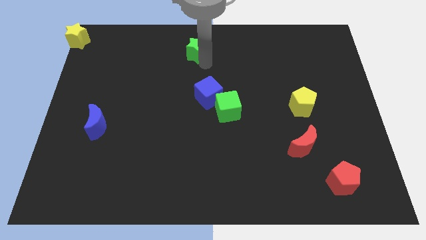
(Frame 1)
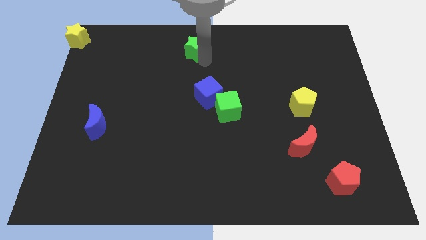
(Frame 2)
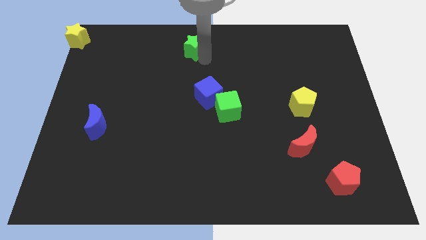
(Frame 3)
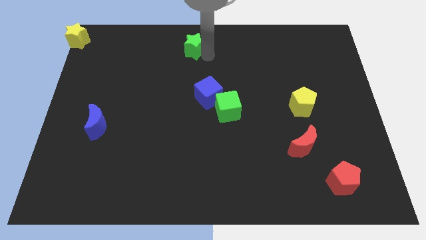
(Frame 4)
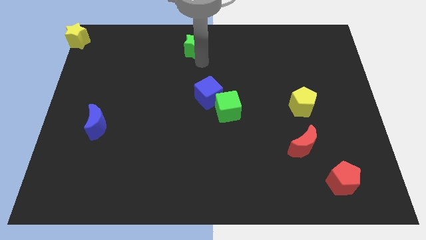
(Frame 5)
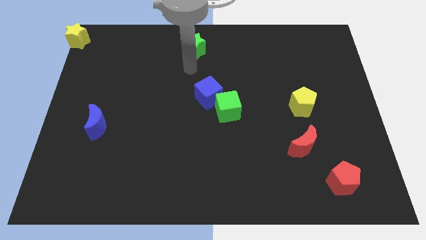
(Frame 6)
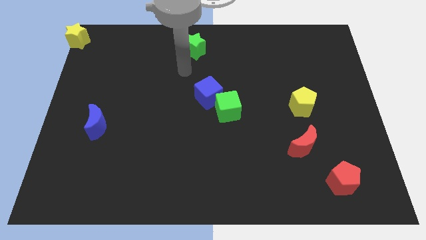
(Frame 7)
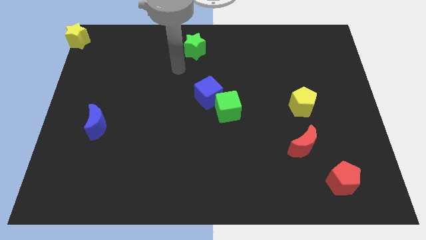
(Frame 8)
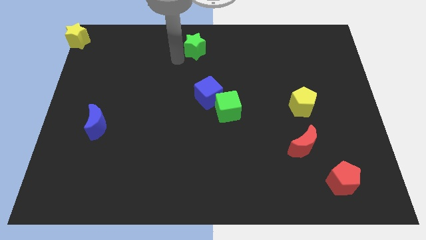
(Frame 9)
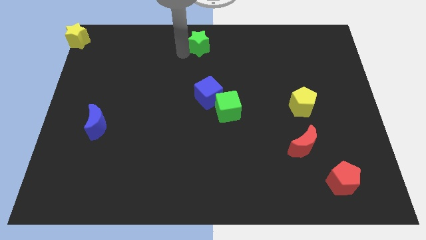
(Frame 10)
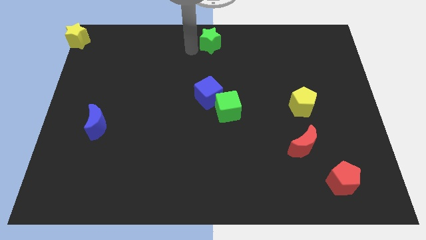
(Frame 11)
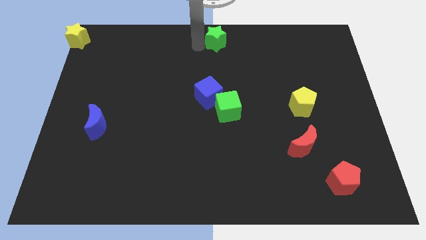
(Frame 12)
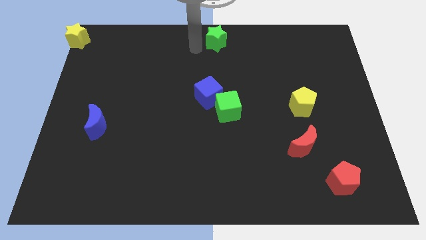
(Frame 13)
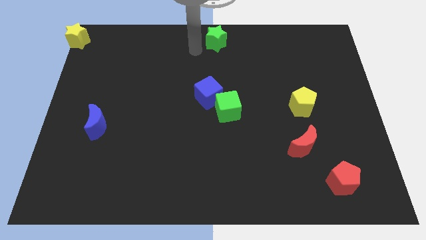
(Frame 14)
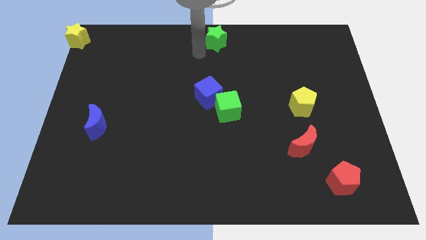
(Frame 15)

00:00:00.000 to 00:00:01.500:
move the green star to the top center of the board

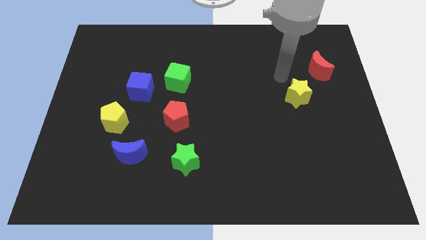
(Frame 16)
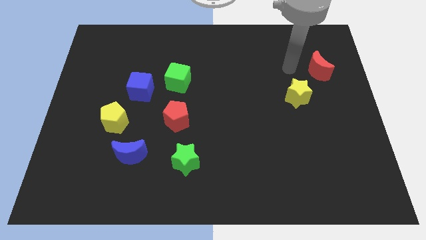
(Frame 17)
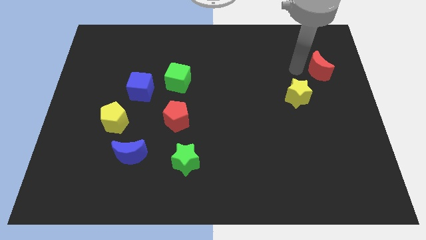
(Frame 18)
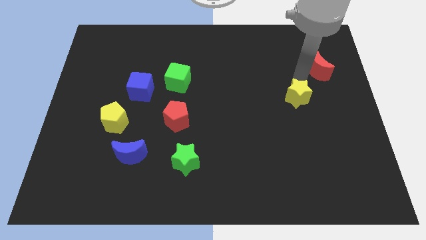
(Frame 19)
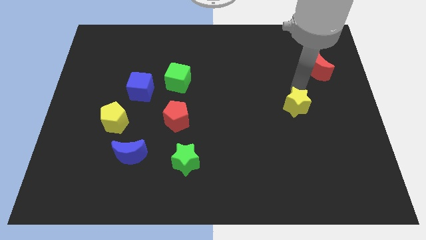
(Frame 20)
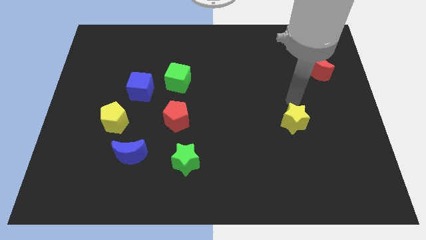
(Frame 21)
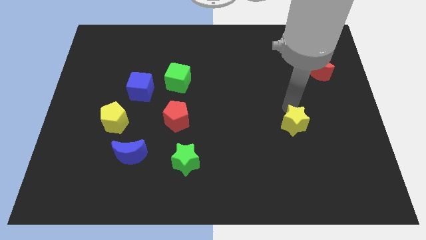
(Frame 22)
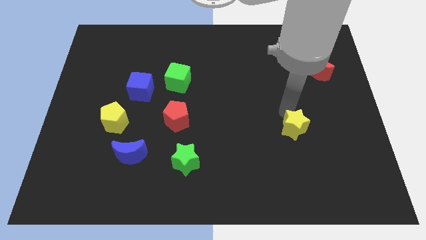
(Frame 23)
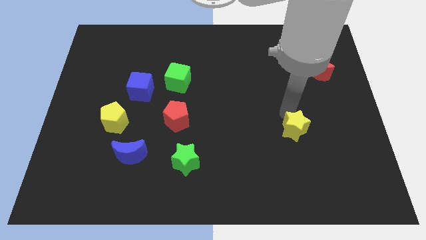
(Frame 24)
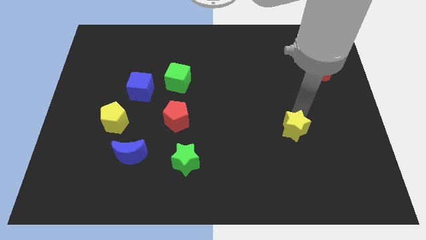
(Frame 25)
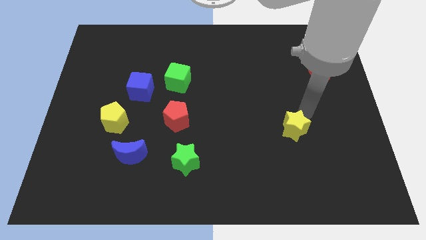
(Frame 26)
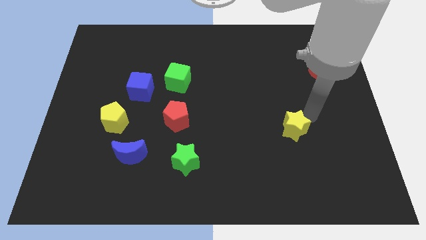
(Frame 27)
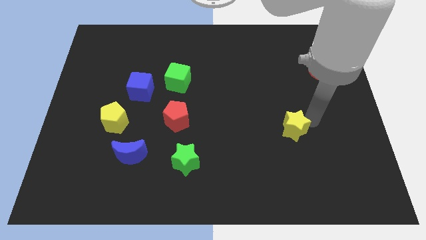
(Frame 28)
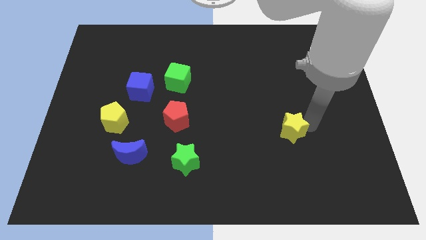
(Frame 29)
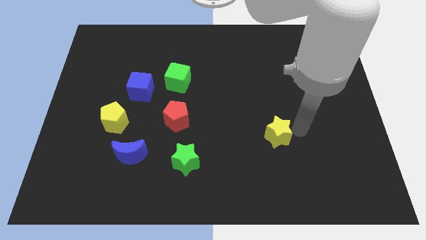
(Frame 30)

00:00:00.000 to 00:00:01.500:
drag the yellow star towards the bottom center

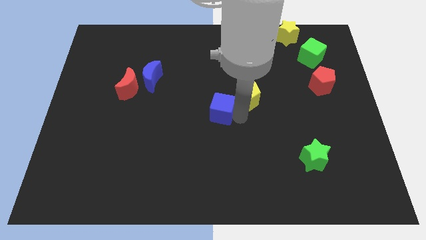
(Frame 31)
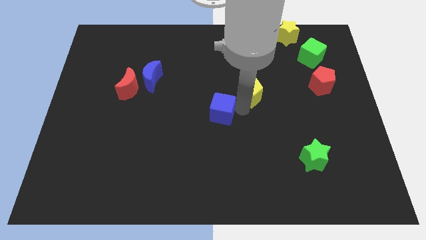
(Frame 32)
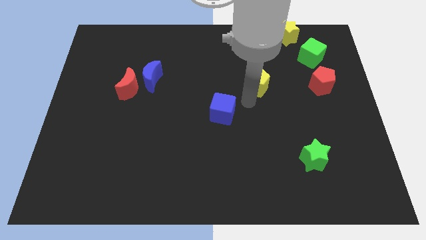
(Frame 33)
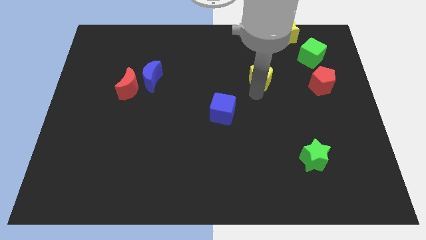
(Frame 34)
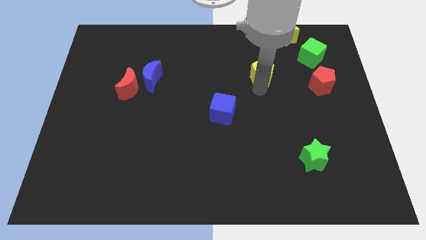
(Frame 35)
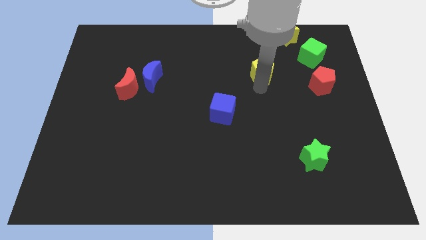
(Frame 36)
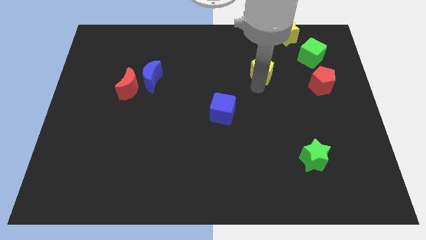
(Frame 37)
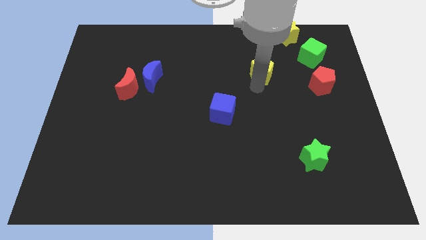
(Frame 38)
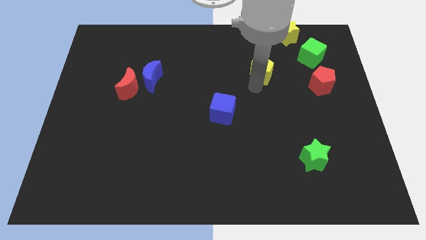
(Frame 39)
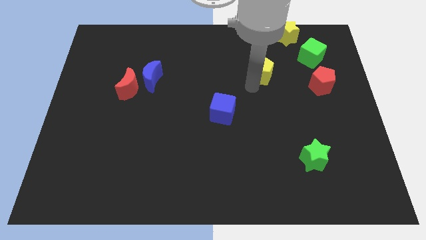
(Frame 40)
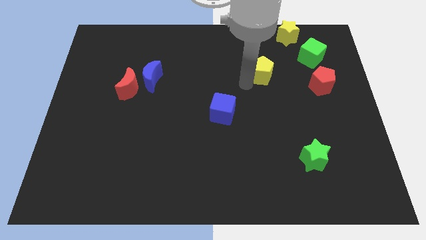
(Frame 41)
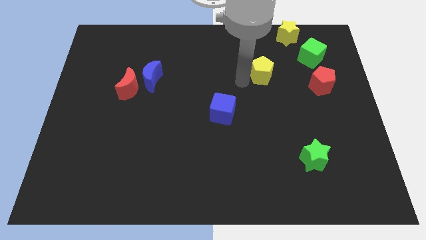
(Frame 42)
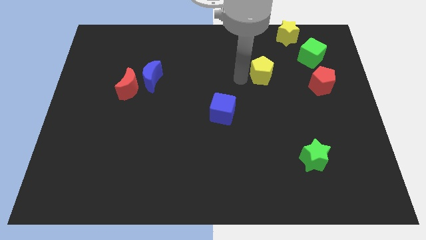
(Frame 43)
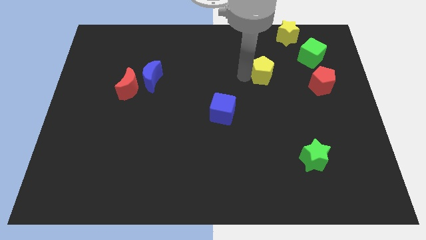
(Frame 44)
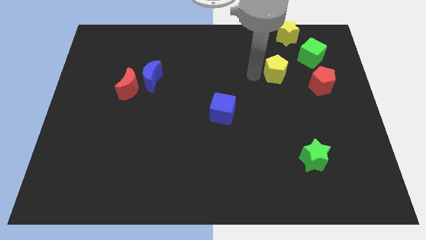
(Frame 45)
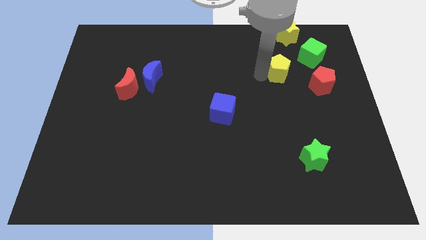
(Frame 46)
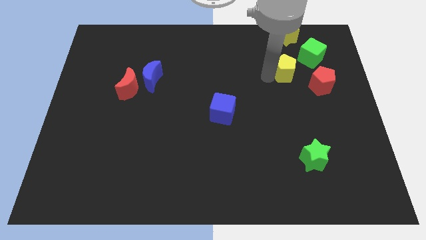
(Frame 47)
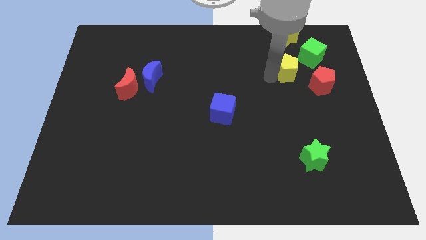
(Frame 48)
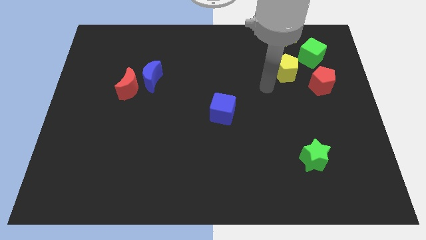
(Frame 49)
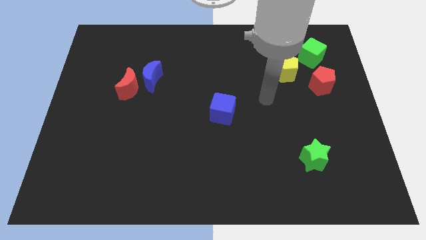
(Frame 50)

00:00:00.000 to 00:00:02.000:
push the yellow pentagon to the bottom left of the green cube

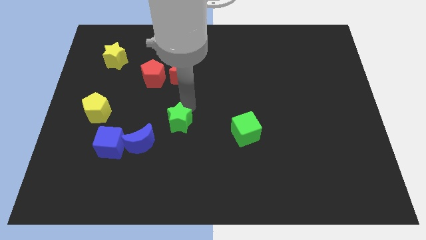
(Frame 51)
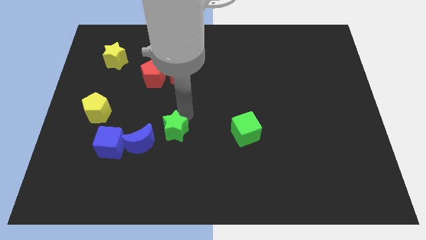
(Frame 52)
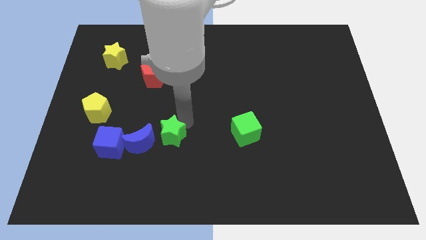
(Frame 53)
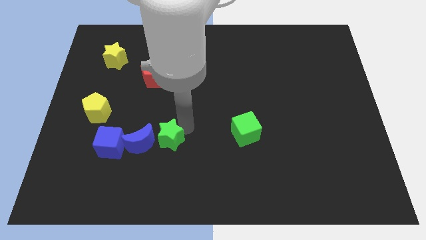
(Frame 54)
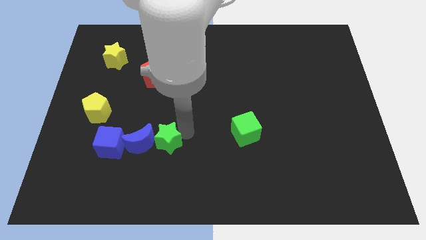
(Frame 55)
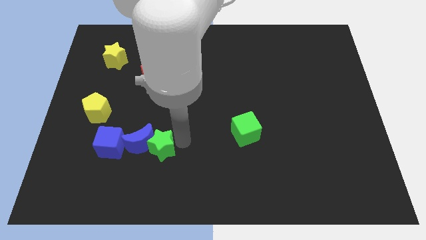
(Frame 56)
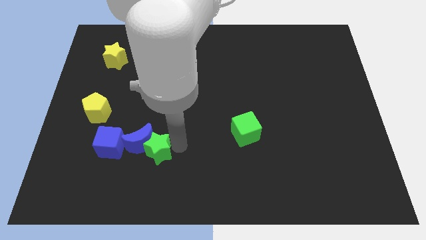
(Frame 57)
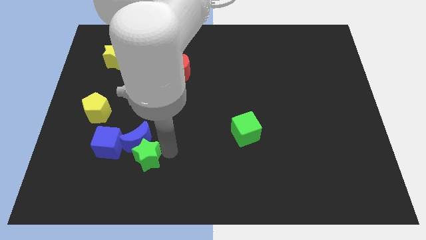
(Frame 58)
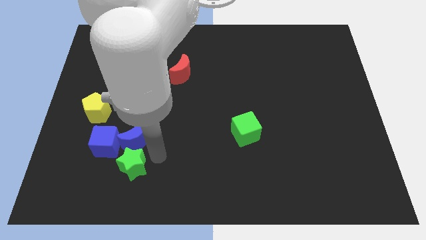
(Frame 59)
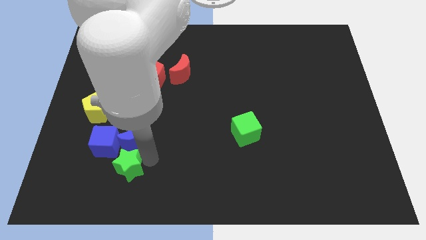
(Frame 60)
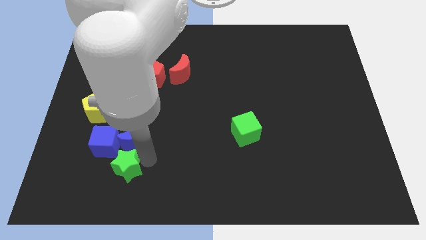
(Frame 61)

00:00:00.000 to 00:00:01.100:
place the green star below the blue moon

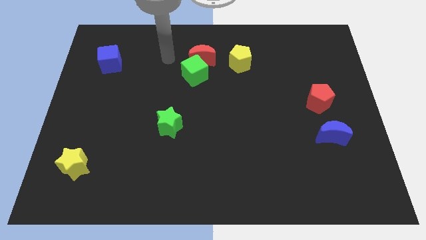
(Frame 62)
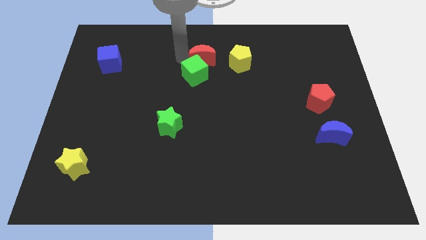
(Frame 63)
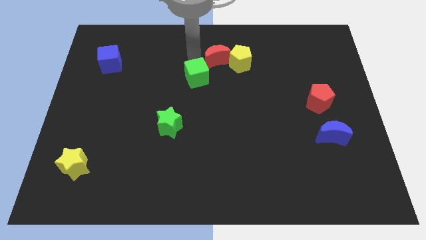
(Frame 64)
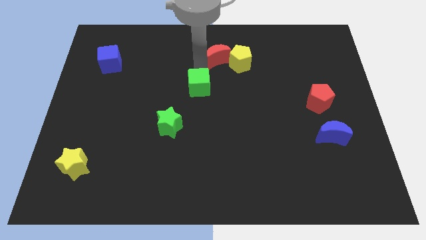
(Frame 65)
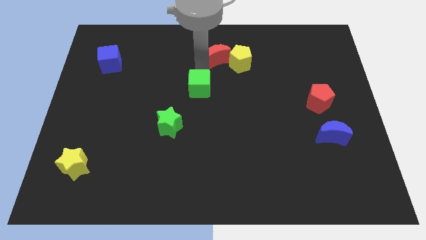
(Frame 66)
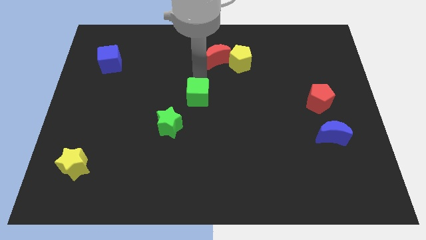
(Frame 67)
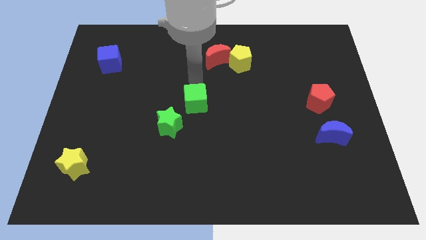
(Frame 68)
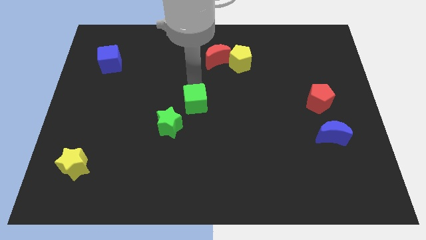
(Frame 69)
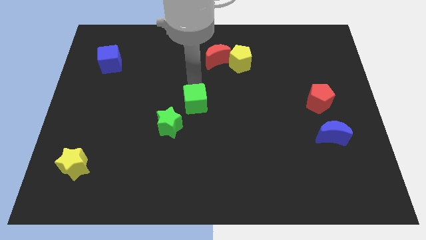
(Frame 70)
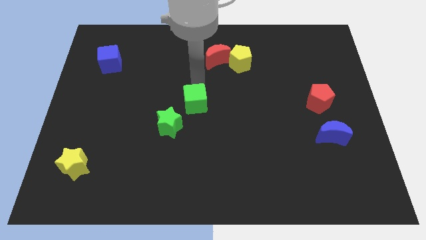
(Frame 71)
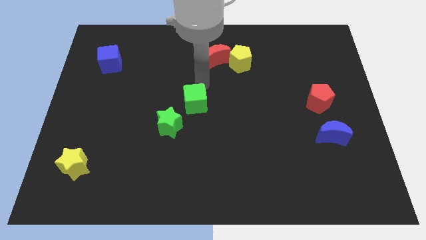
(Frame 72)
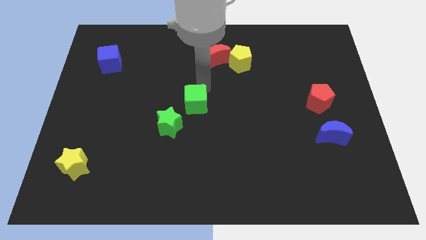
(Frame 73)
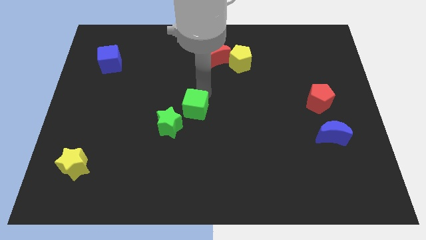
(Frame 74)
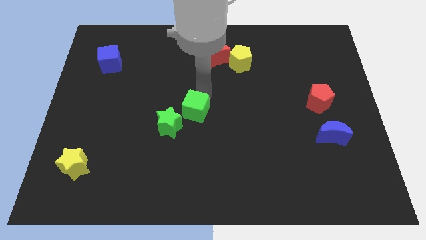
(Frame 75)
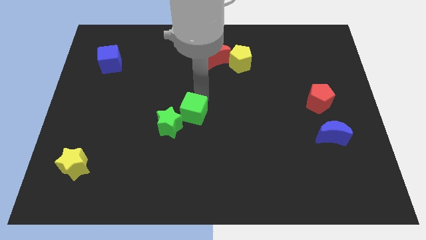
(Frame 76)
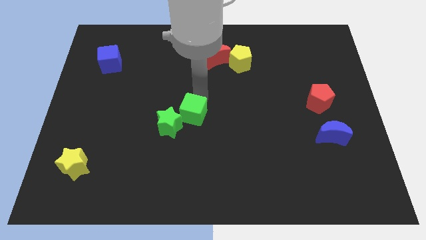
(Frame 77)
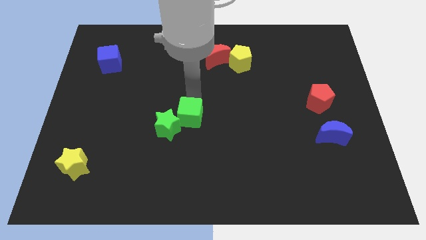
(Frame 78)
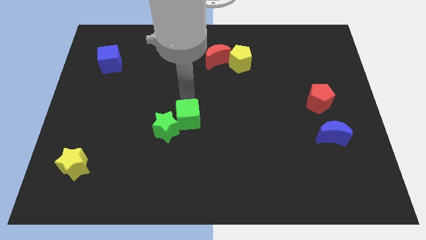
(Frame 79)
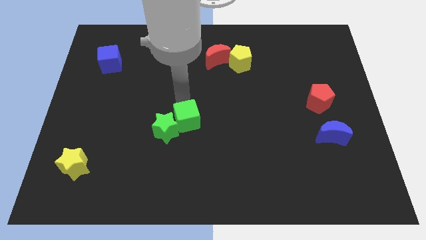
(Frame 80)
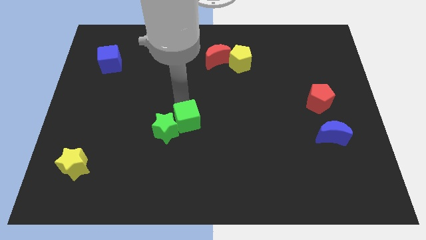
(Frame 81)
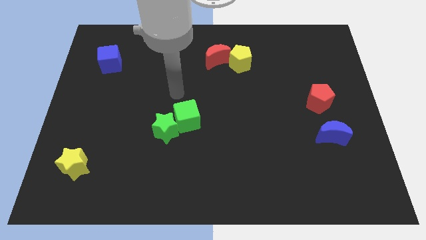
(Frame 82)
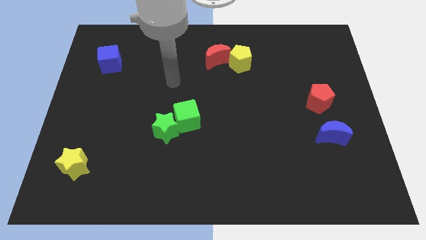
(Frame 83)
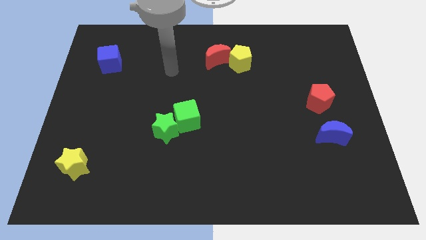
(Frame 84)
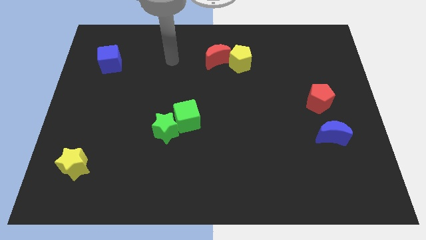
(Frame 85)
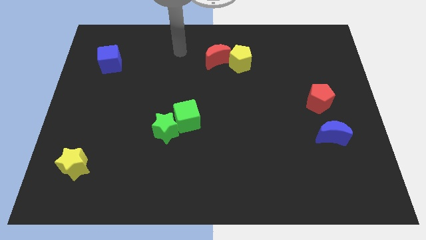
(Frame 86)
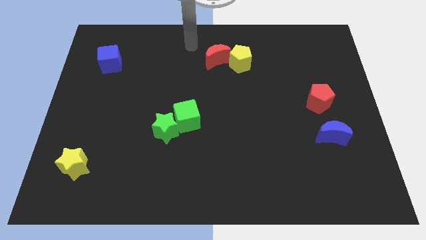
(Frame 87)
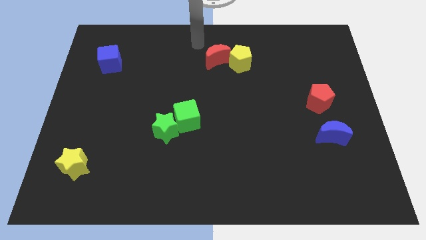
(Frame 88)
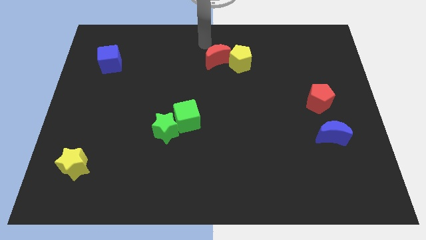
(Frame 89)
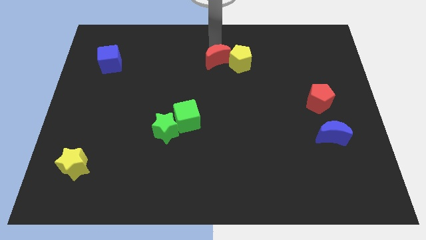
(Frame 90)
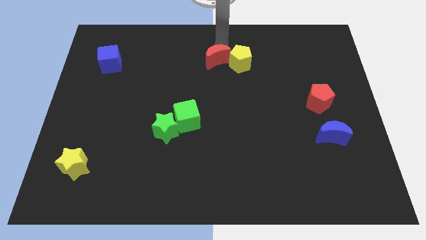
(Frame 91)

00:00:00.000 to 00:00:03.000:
drag the green cube and place it next to the green star
